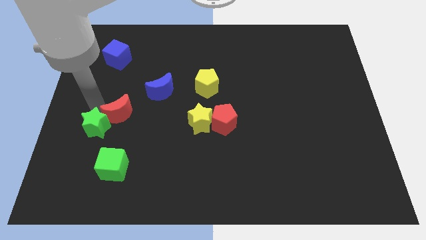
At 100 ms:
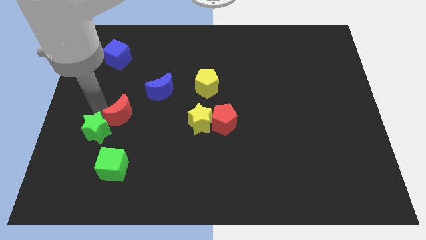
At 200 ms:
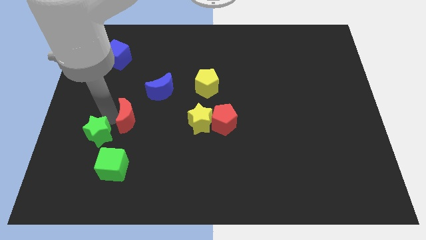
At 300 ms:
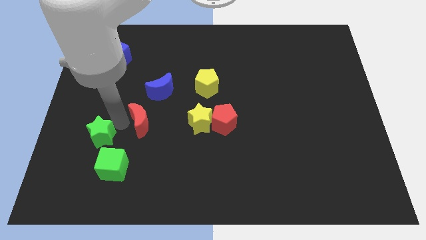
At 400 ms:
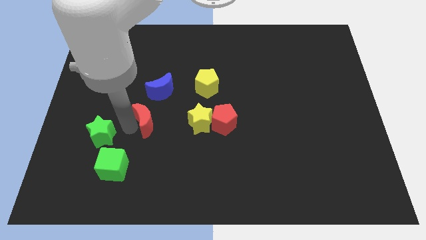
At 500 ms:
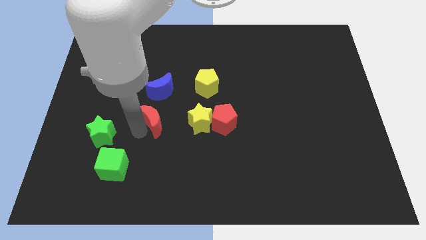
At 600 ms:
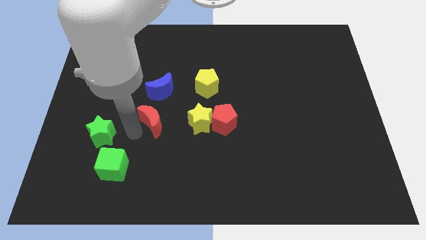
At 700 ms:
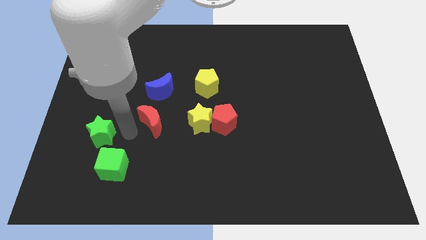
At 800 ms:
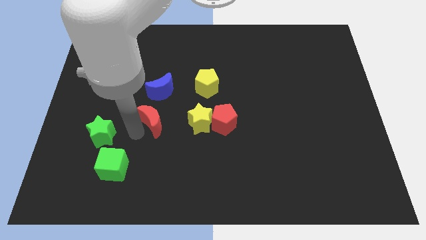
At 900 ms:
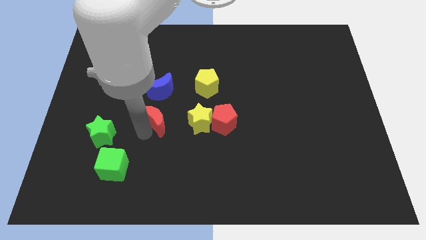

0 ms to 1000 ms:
separate the green star and the red crescent

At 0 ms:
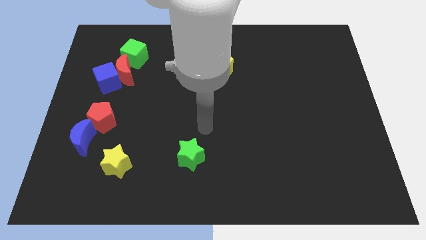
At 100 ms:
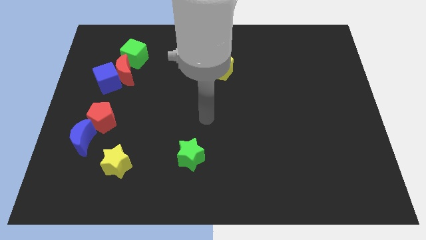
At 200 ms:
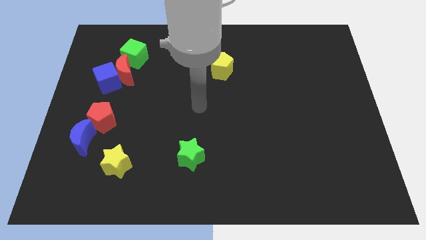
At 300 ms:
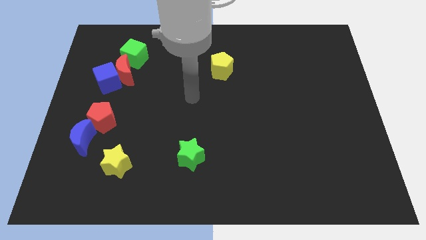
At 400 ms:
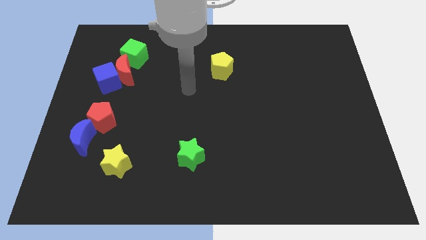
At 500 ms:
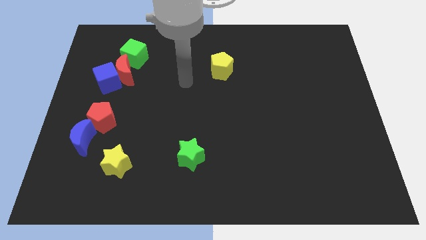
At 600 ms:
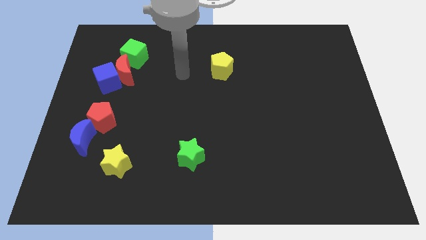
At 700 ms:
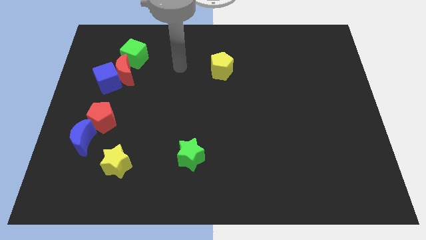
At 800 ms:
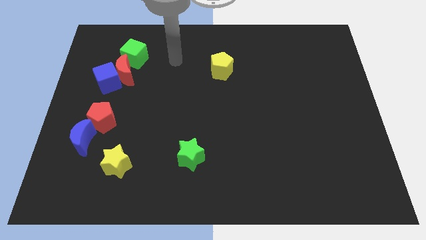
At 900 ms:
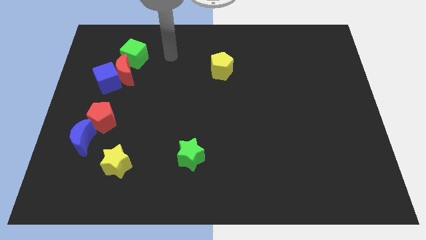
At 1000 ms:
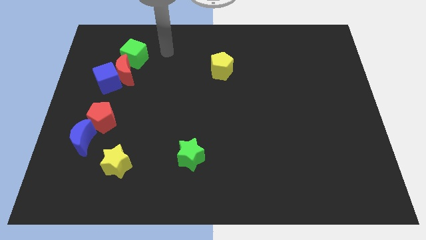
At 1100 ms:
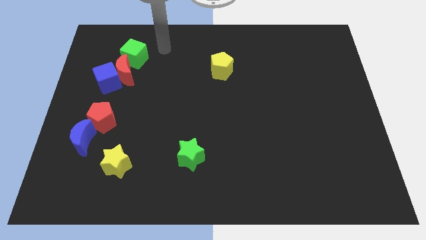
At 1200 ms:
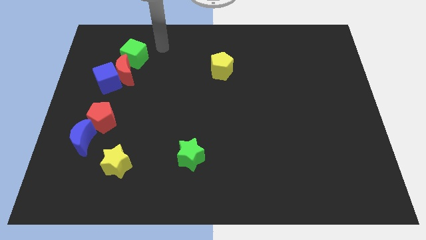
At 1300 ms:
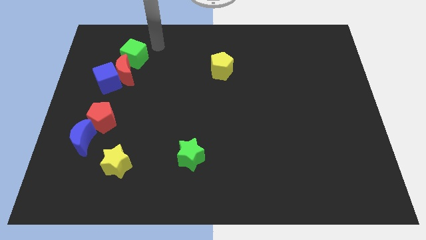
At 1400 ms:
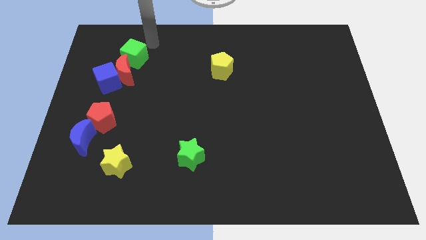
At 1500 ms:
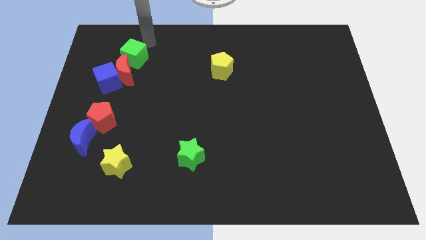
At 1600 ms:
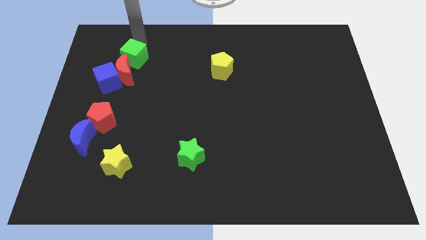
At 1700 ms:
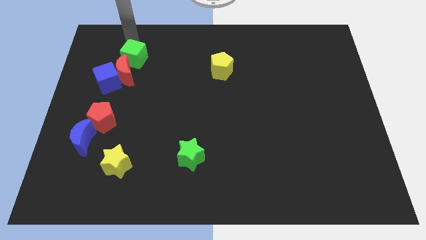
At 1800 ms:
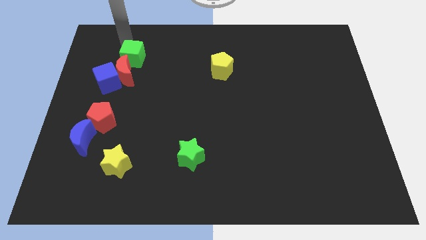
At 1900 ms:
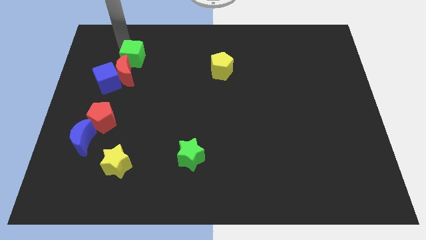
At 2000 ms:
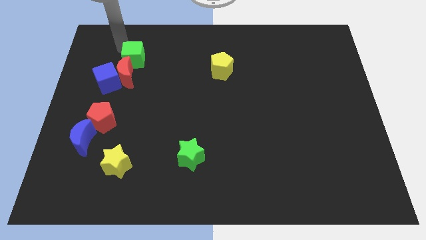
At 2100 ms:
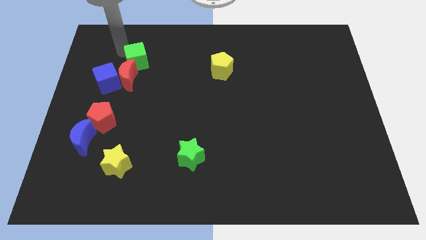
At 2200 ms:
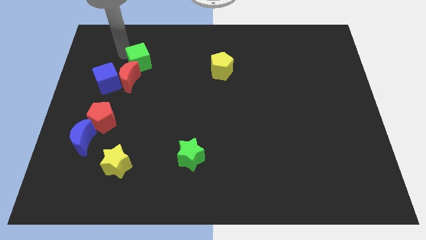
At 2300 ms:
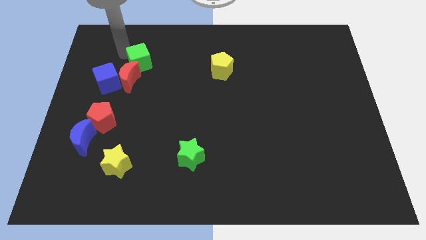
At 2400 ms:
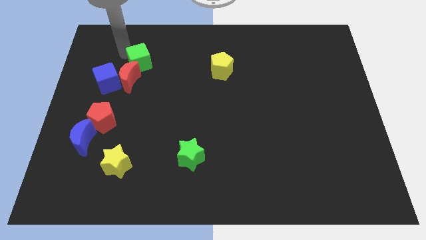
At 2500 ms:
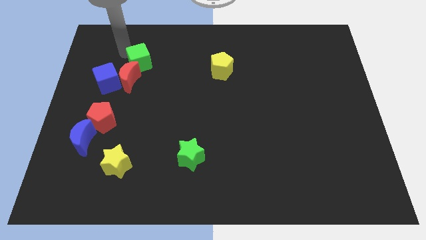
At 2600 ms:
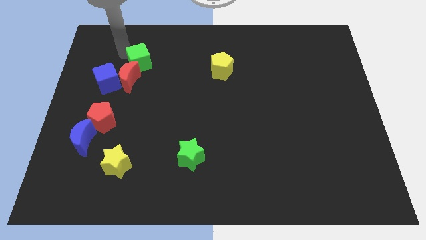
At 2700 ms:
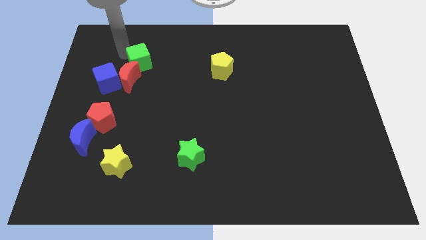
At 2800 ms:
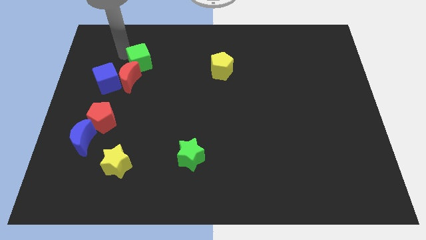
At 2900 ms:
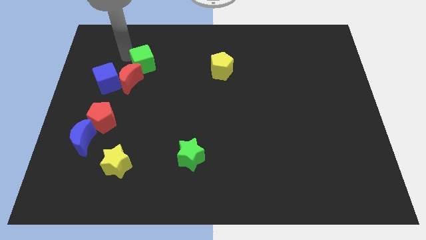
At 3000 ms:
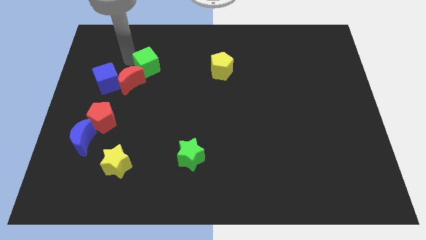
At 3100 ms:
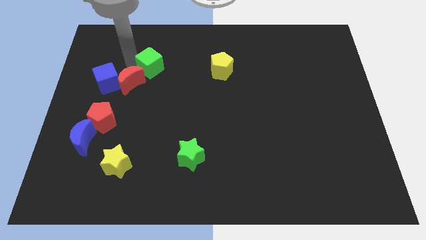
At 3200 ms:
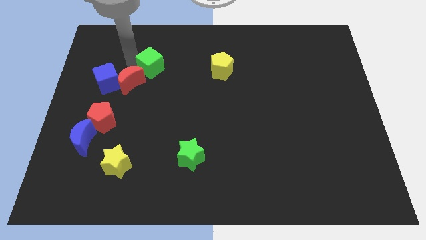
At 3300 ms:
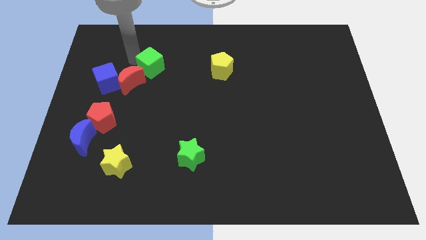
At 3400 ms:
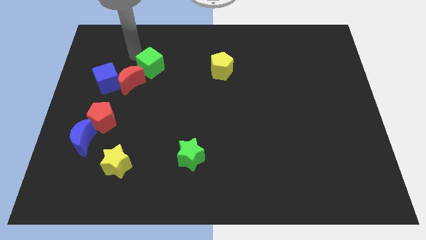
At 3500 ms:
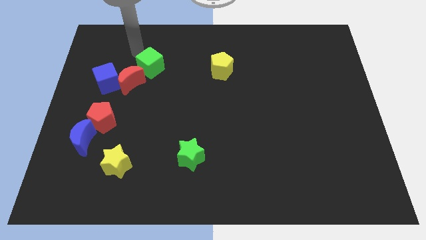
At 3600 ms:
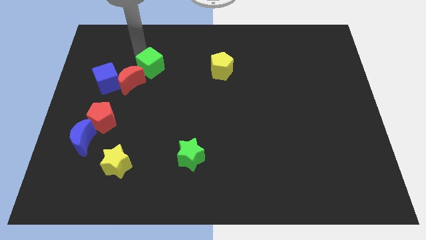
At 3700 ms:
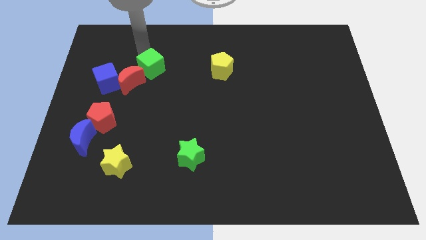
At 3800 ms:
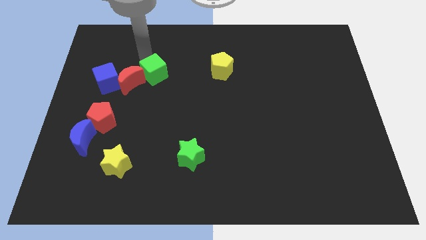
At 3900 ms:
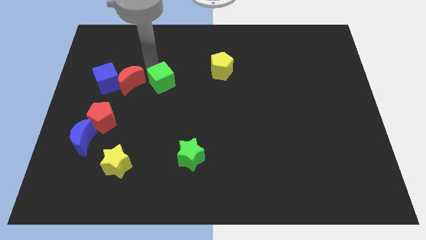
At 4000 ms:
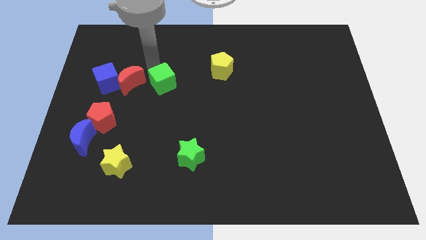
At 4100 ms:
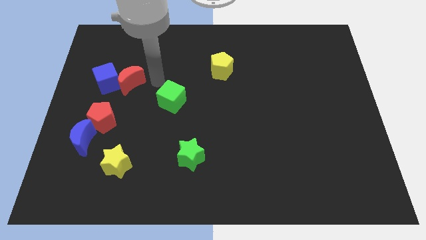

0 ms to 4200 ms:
move the green cube to the right side of the red crescent

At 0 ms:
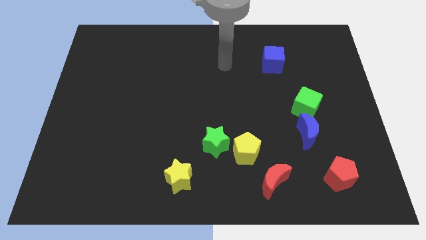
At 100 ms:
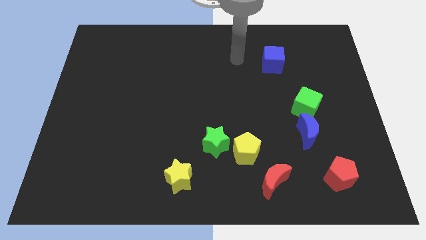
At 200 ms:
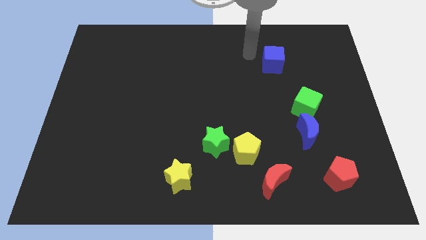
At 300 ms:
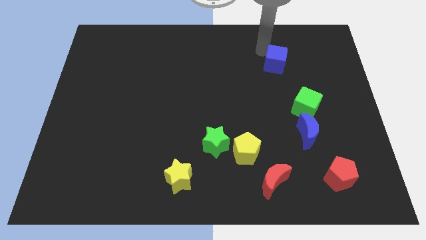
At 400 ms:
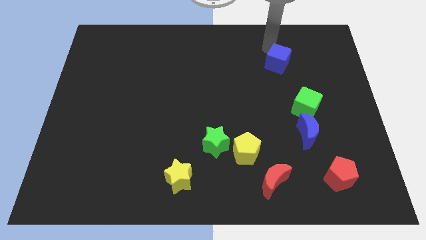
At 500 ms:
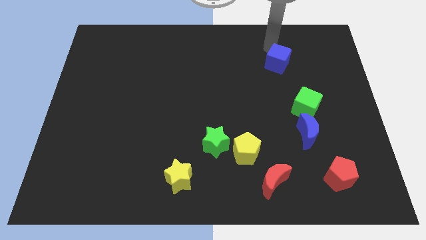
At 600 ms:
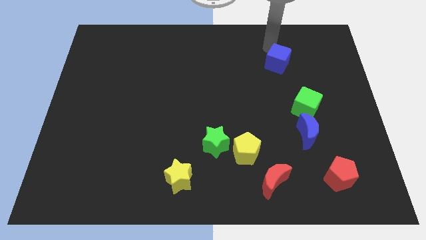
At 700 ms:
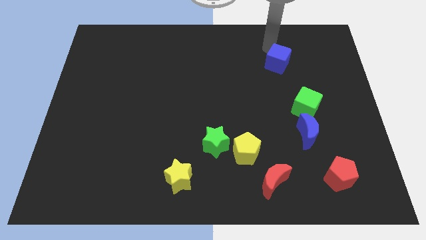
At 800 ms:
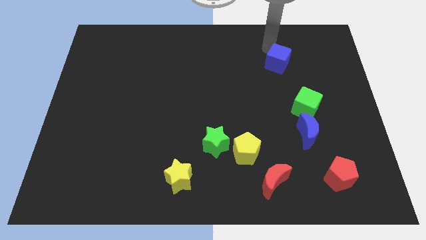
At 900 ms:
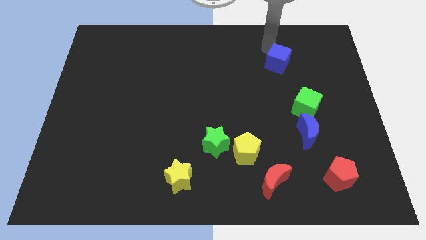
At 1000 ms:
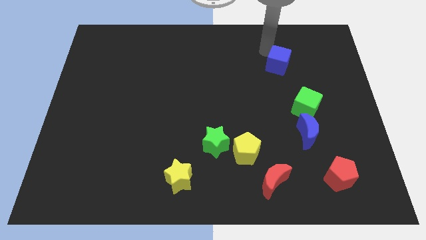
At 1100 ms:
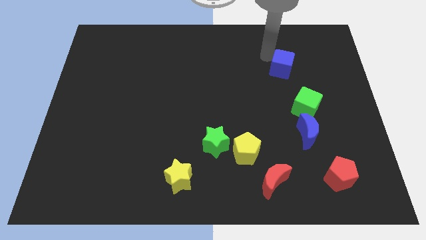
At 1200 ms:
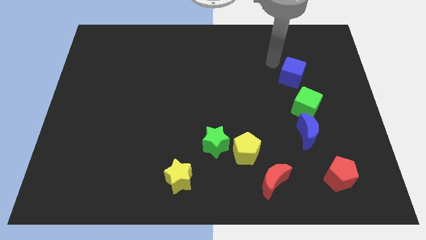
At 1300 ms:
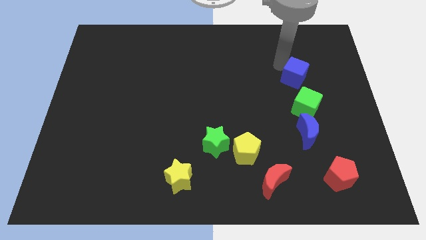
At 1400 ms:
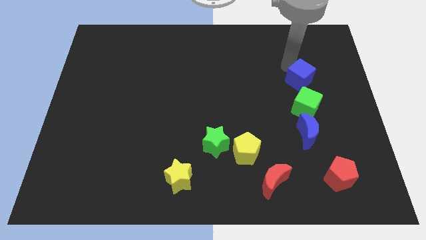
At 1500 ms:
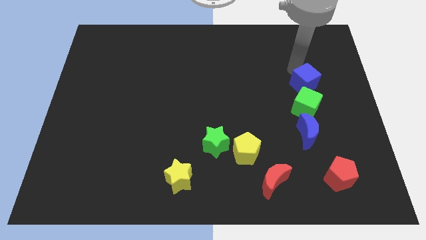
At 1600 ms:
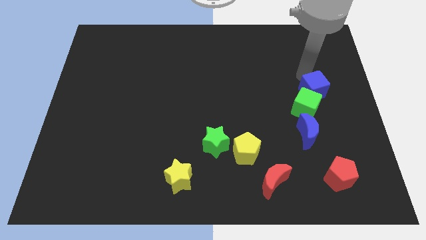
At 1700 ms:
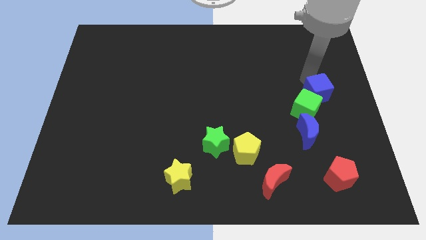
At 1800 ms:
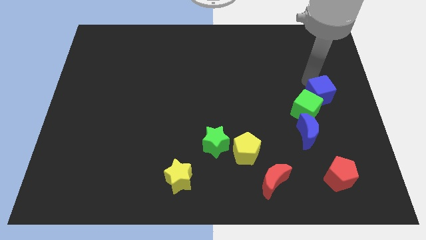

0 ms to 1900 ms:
slide the blue cube above the green cube

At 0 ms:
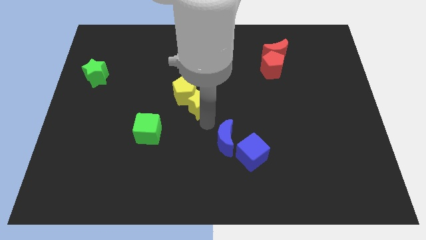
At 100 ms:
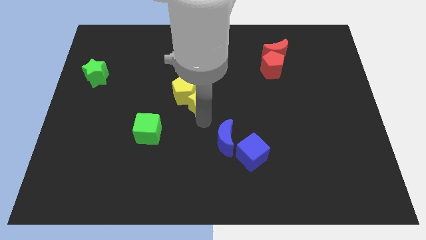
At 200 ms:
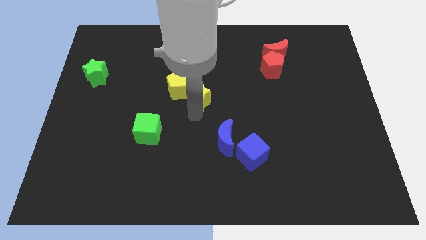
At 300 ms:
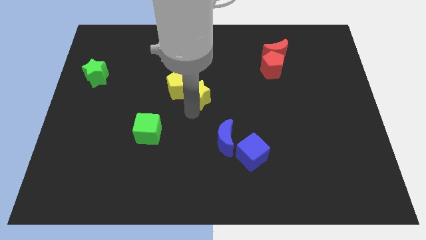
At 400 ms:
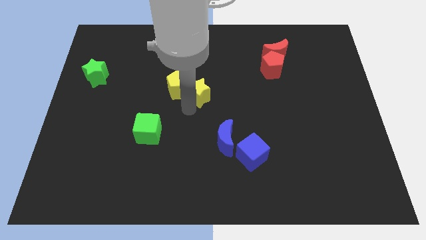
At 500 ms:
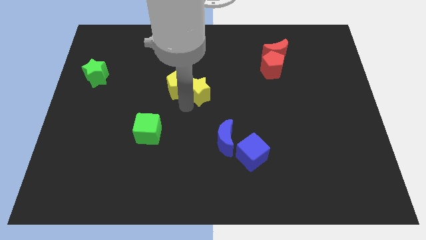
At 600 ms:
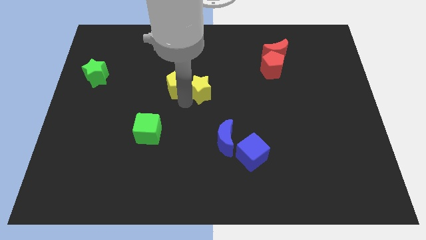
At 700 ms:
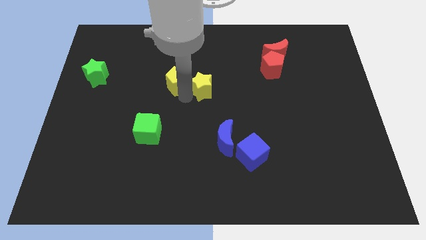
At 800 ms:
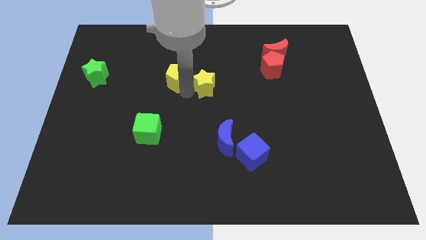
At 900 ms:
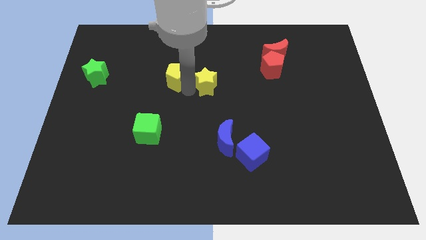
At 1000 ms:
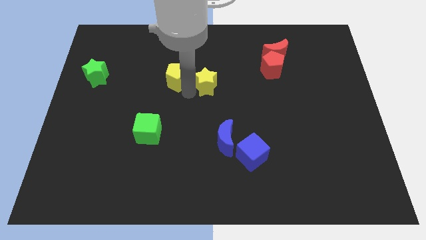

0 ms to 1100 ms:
push yellow blocks slightly upwards

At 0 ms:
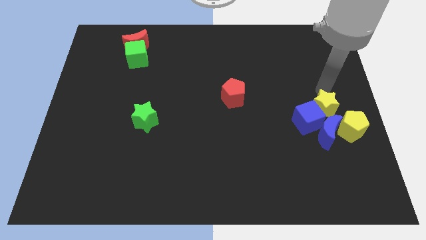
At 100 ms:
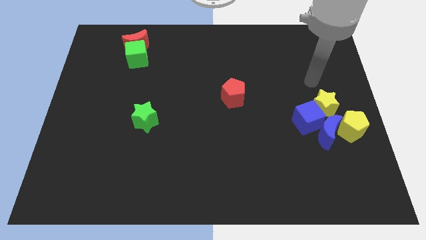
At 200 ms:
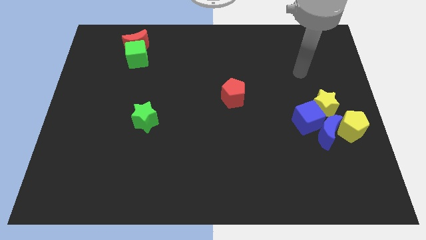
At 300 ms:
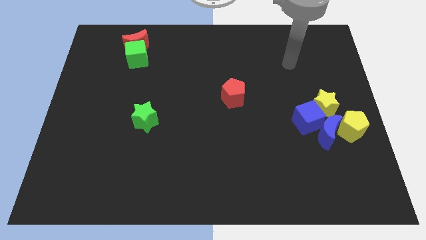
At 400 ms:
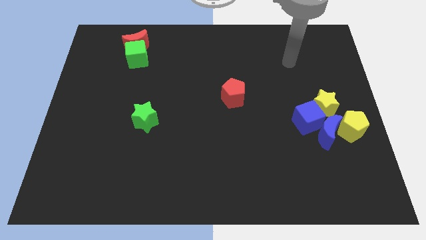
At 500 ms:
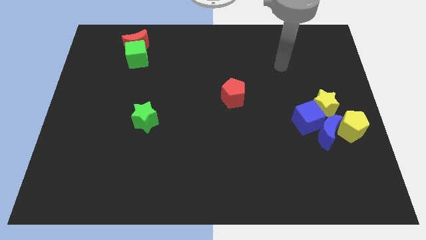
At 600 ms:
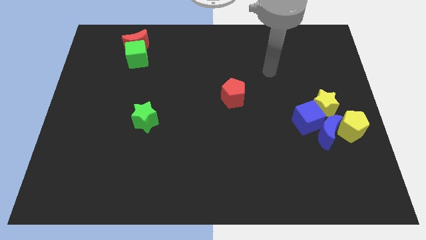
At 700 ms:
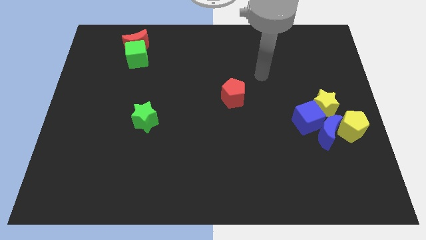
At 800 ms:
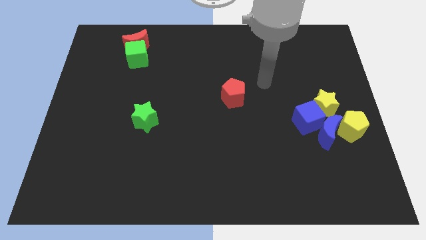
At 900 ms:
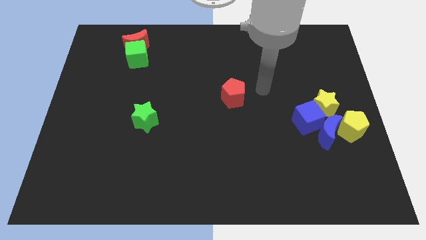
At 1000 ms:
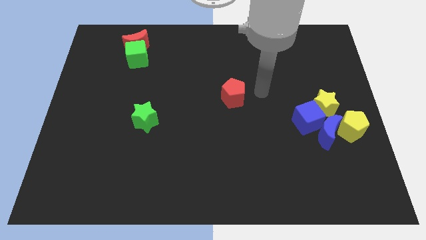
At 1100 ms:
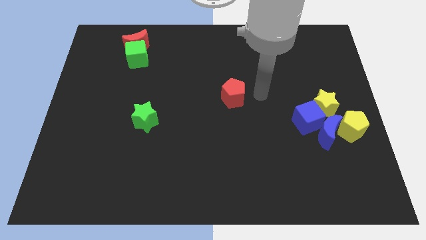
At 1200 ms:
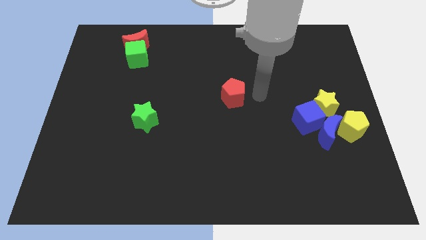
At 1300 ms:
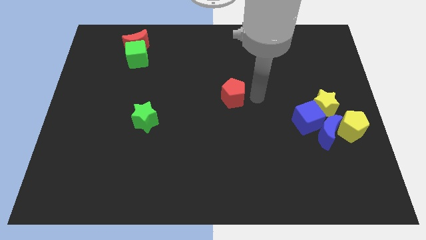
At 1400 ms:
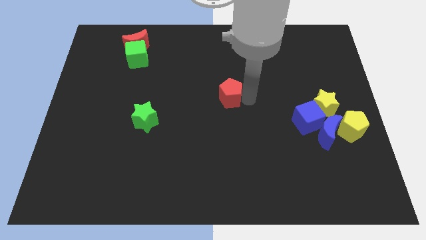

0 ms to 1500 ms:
move your hand away from the yellow star
